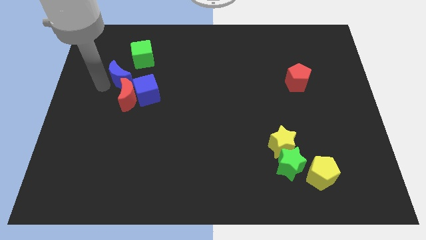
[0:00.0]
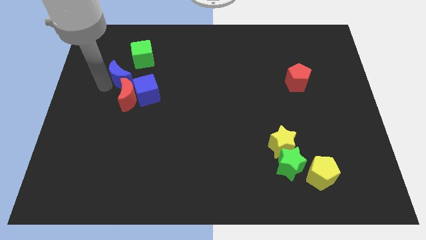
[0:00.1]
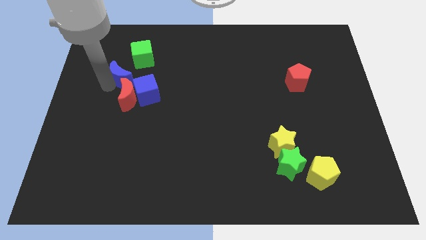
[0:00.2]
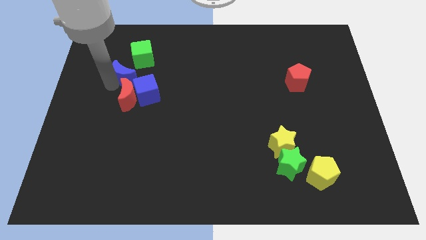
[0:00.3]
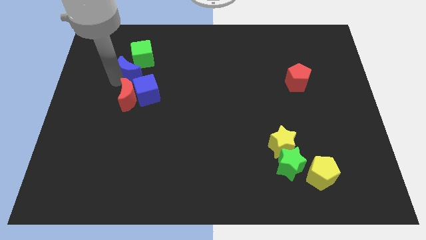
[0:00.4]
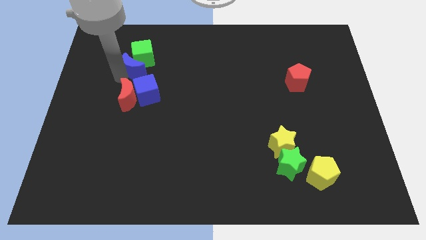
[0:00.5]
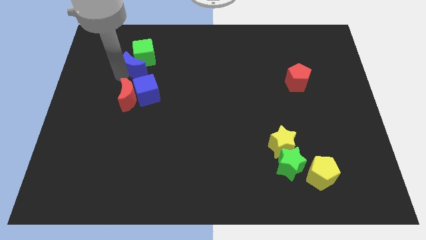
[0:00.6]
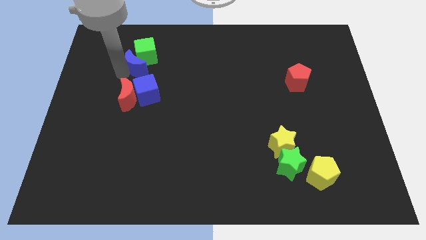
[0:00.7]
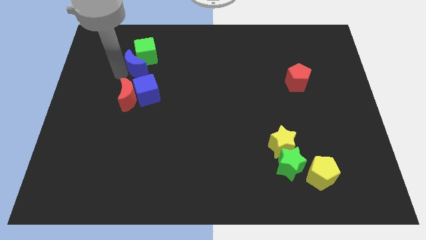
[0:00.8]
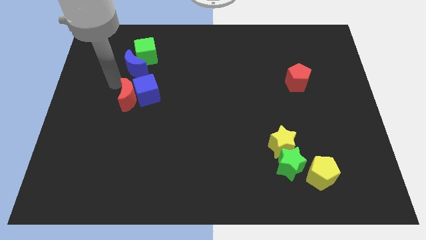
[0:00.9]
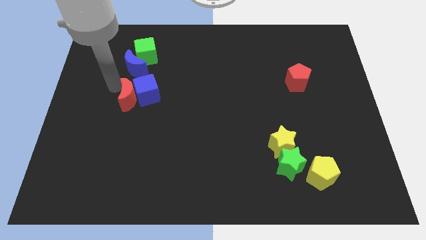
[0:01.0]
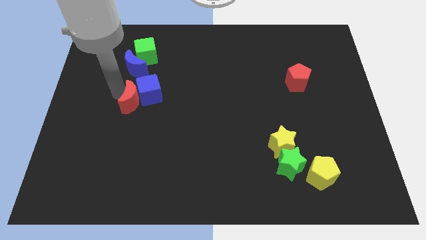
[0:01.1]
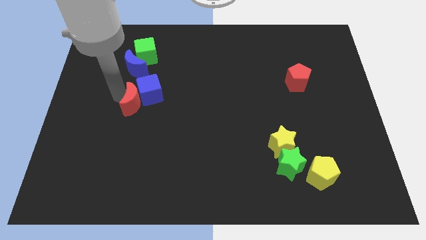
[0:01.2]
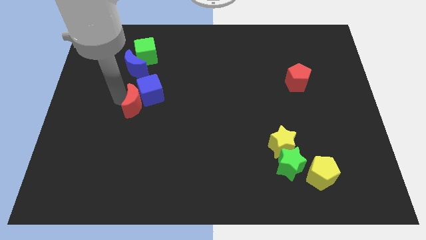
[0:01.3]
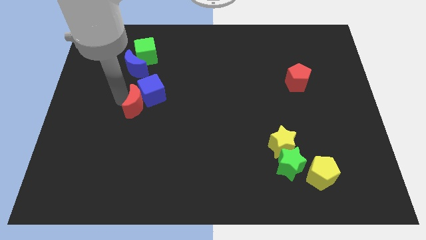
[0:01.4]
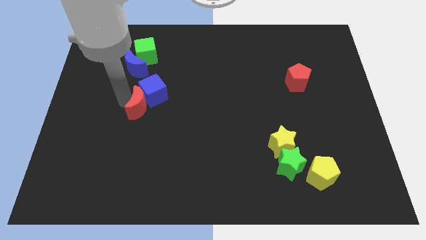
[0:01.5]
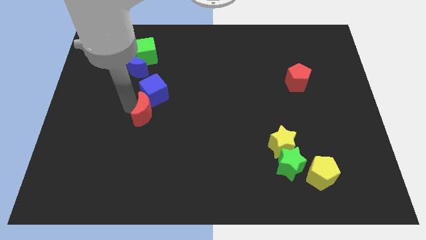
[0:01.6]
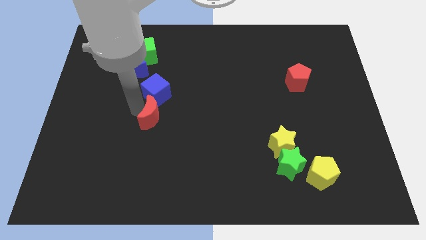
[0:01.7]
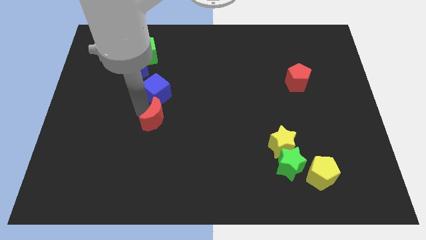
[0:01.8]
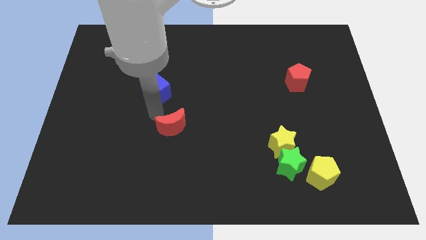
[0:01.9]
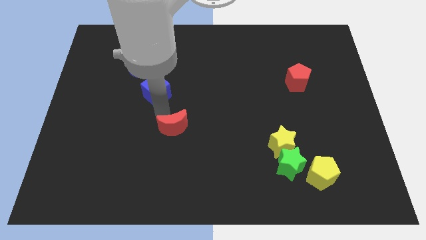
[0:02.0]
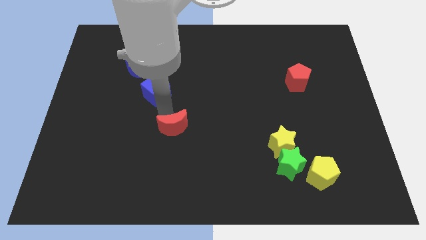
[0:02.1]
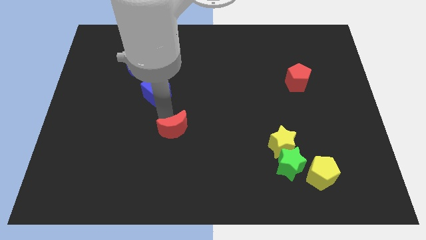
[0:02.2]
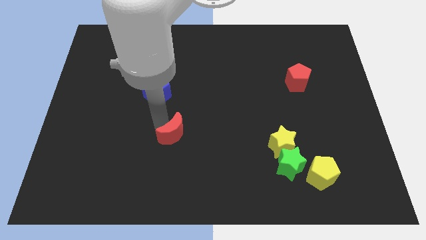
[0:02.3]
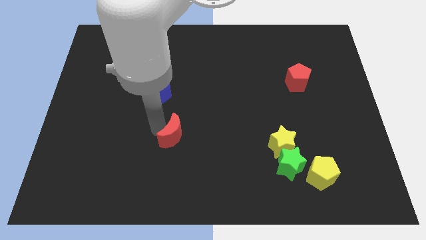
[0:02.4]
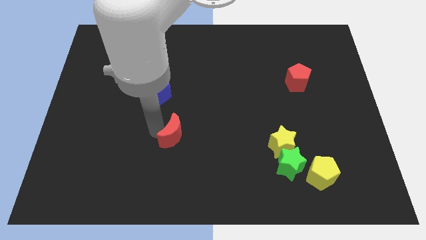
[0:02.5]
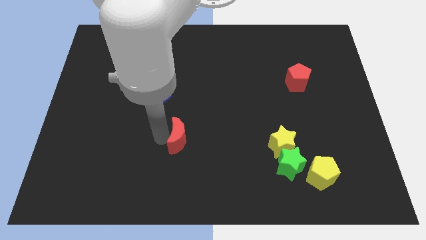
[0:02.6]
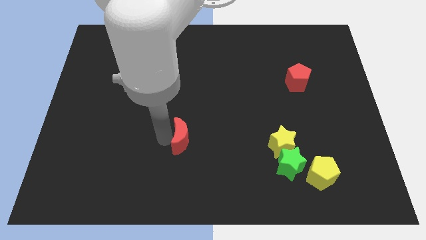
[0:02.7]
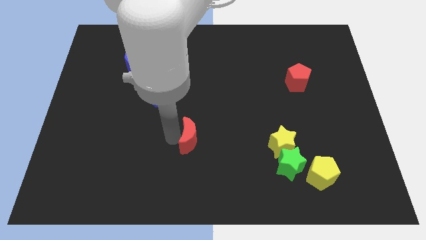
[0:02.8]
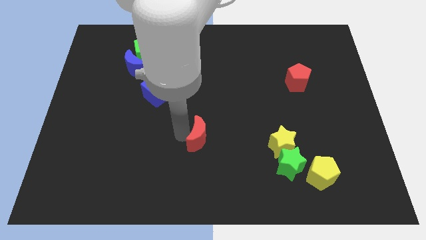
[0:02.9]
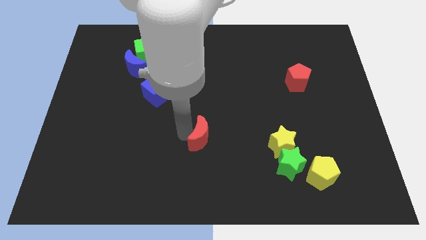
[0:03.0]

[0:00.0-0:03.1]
adjust blue and red moons to make a diagonal line with blue cube

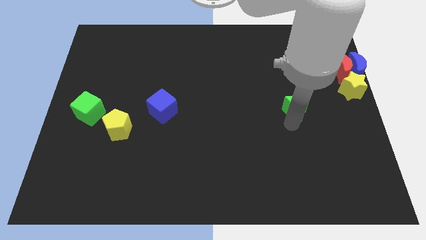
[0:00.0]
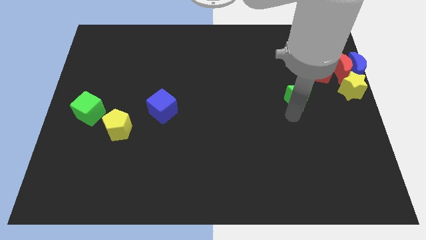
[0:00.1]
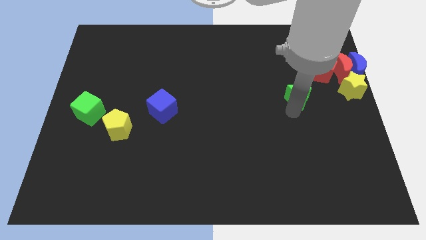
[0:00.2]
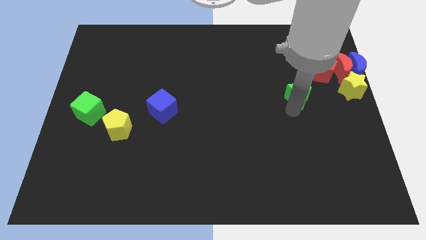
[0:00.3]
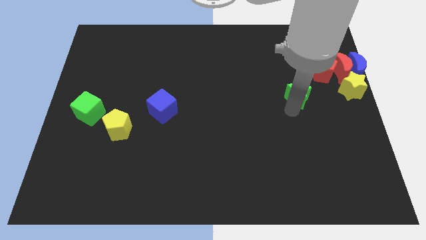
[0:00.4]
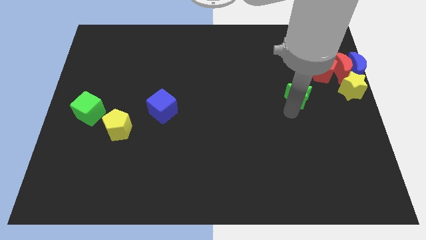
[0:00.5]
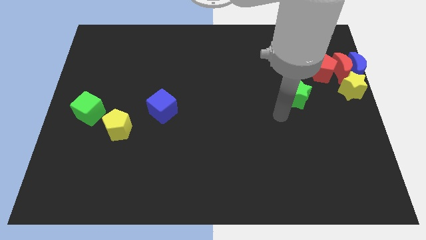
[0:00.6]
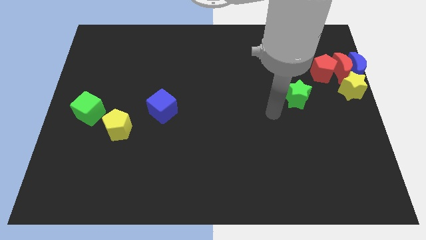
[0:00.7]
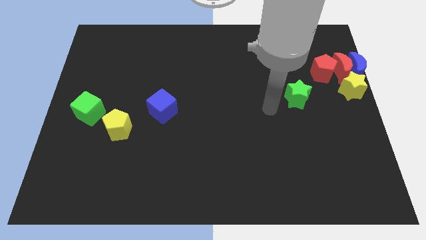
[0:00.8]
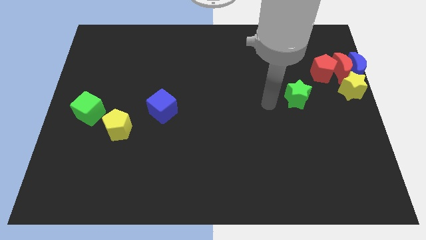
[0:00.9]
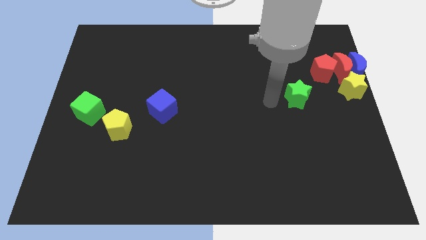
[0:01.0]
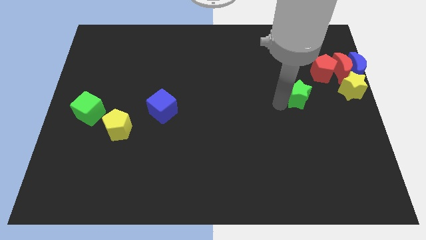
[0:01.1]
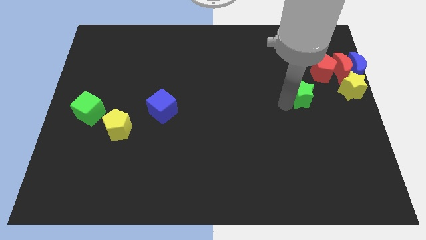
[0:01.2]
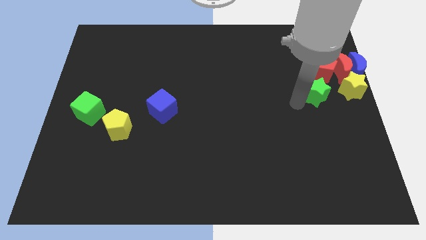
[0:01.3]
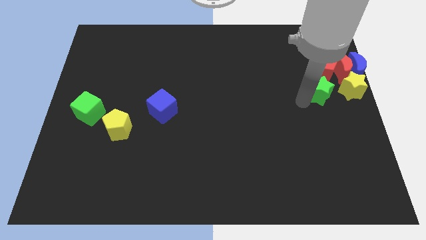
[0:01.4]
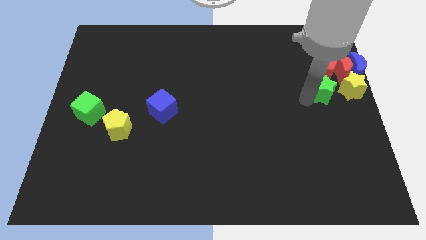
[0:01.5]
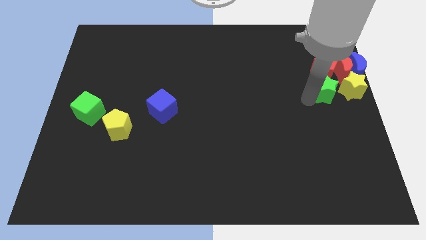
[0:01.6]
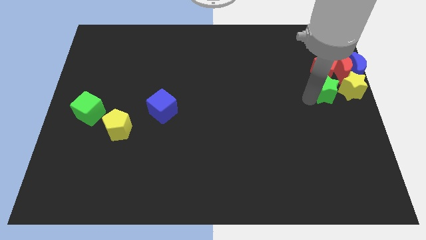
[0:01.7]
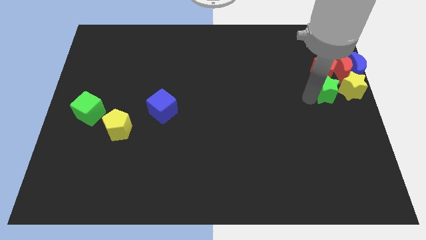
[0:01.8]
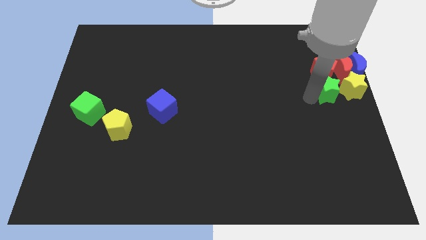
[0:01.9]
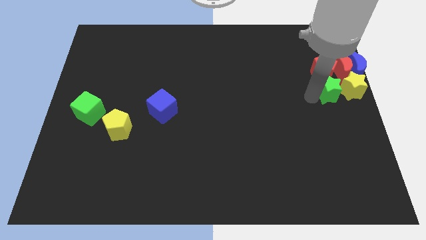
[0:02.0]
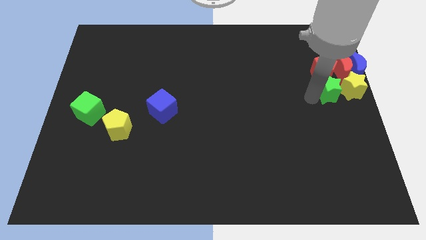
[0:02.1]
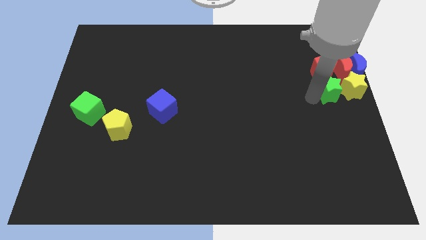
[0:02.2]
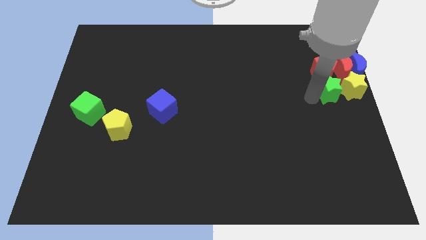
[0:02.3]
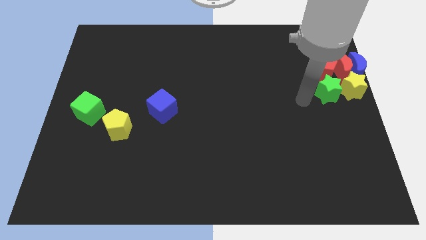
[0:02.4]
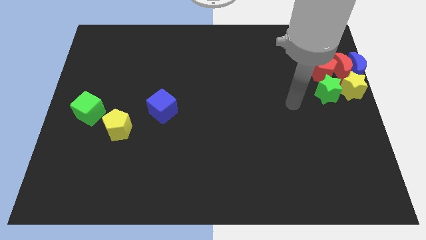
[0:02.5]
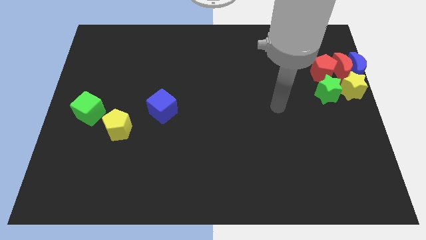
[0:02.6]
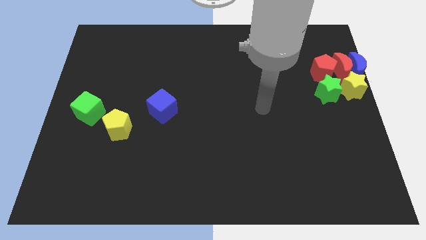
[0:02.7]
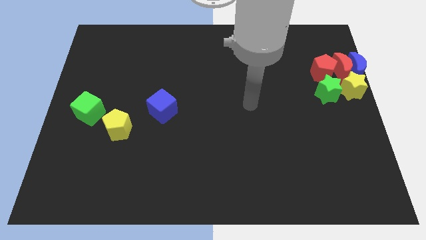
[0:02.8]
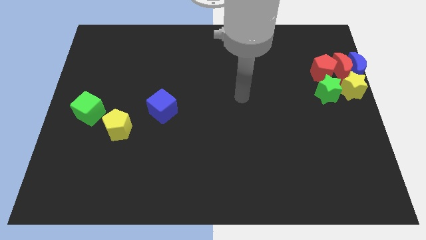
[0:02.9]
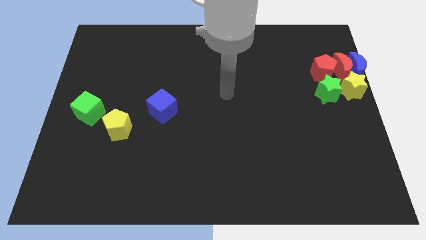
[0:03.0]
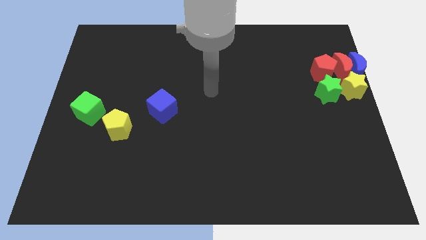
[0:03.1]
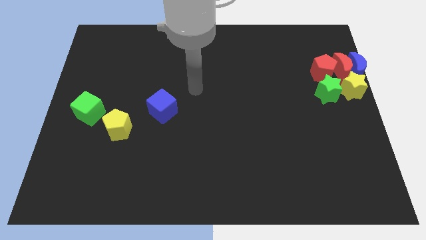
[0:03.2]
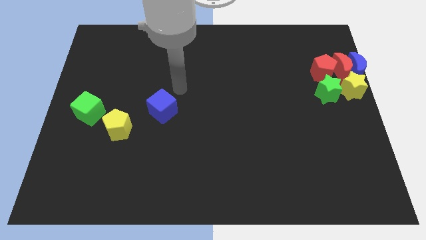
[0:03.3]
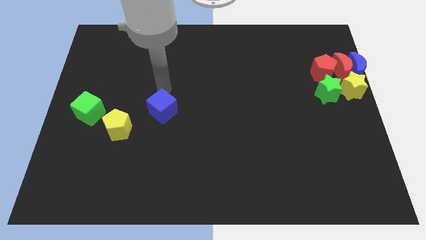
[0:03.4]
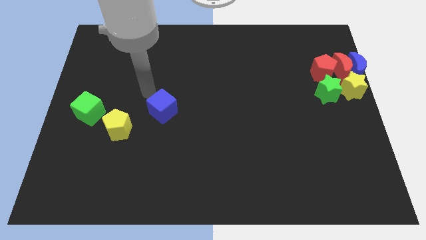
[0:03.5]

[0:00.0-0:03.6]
put the green star at the bottom side of the red pentagon and go away

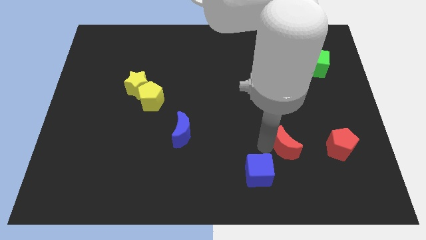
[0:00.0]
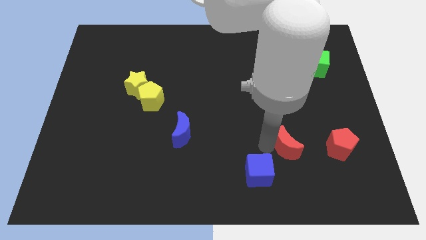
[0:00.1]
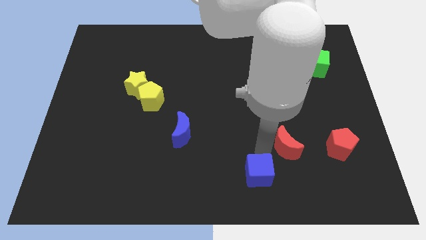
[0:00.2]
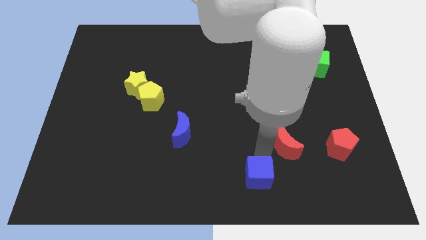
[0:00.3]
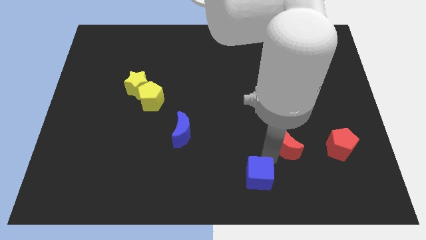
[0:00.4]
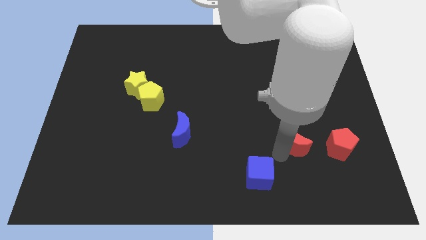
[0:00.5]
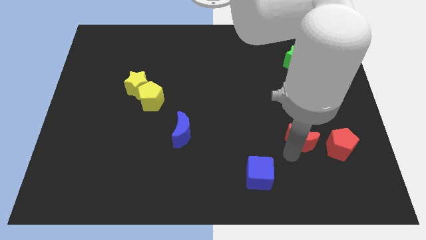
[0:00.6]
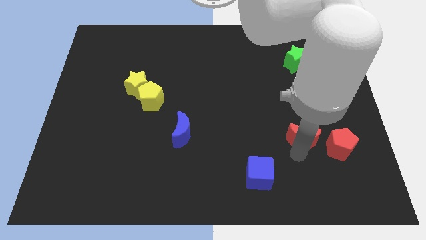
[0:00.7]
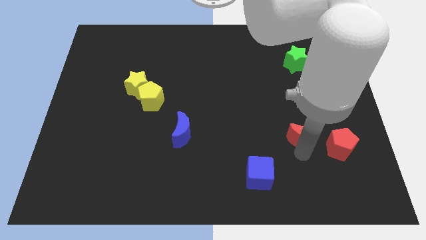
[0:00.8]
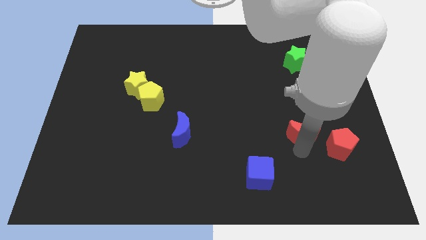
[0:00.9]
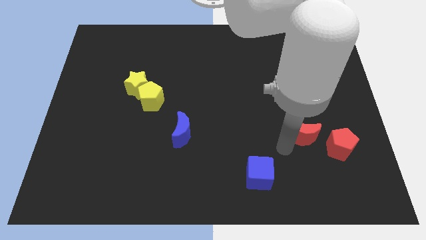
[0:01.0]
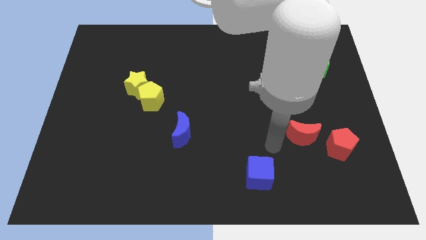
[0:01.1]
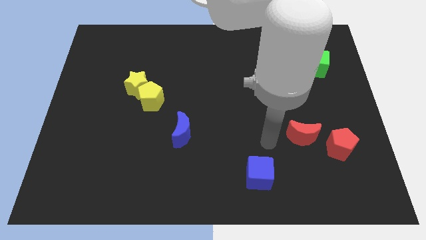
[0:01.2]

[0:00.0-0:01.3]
move red crescent slightly uup

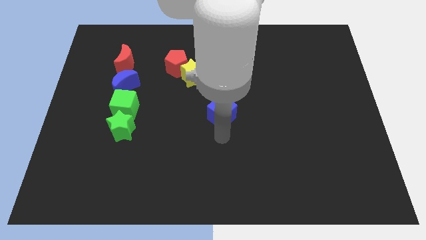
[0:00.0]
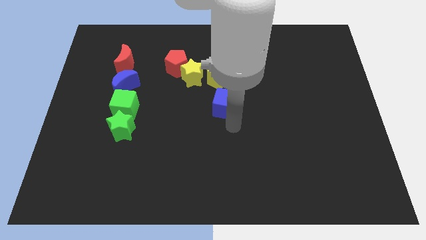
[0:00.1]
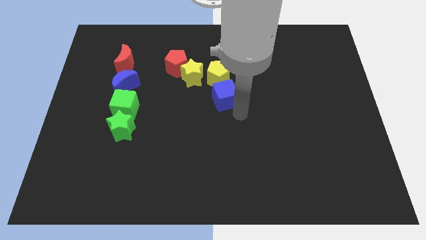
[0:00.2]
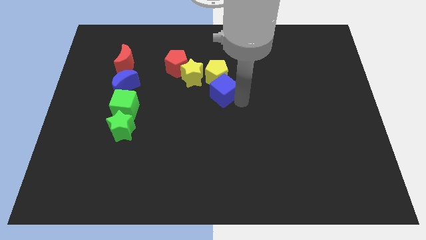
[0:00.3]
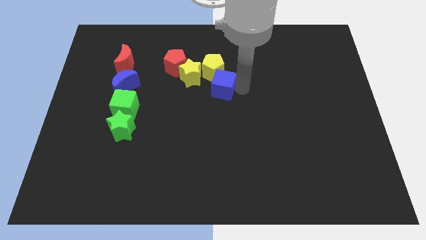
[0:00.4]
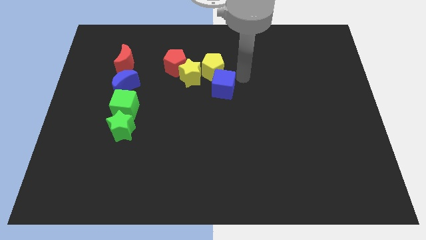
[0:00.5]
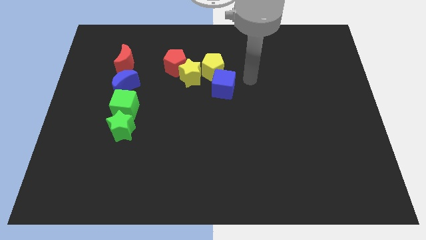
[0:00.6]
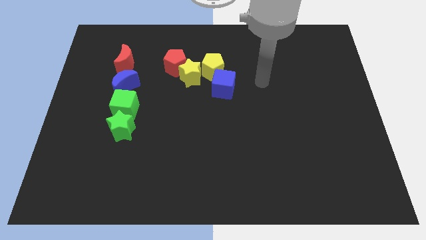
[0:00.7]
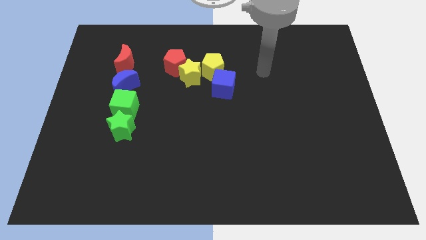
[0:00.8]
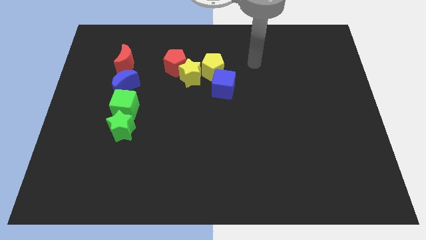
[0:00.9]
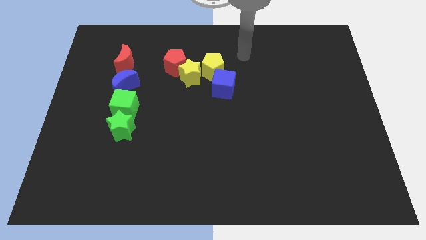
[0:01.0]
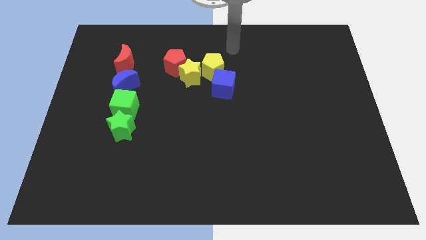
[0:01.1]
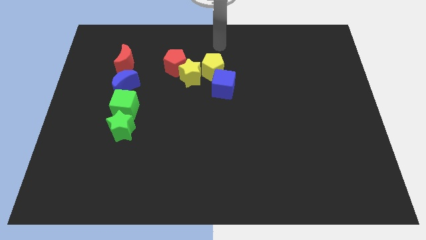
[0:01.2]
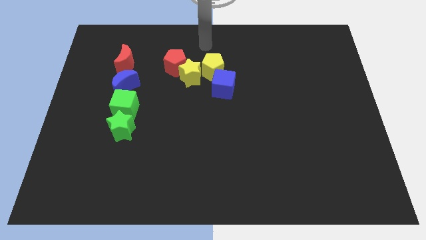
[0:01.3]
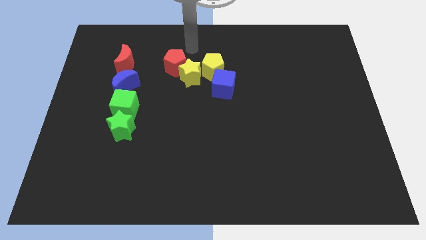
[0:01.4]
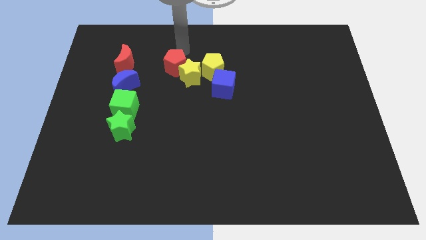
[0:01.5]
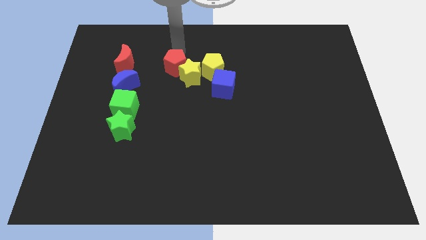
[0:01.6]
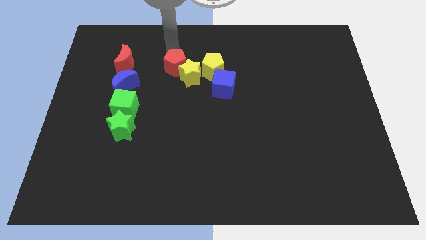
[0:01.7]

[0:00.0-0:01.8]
place red pentagon diagonally upwards to left side of the yellow star
